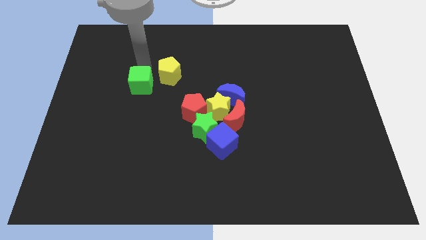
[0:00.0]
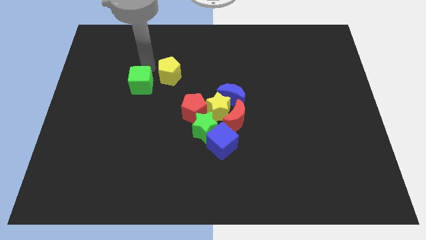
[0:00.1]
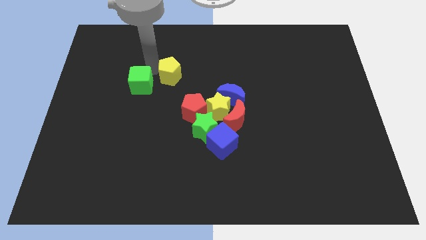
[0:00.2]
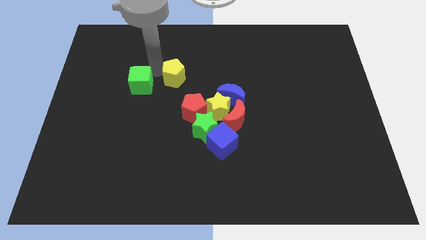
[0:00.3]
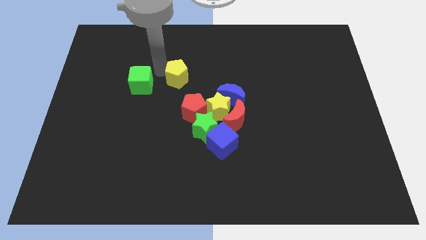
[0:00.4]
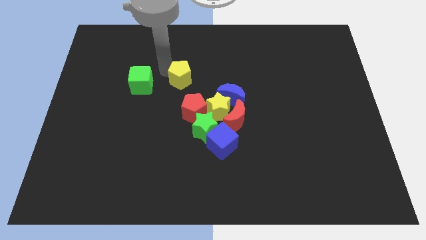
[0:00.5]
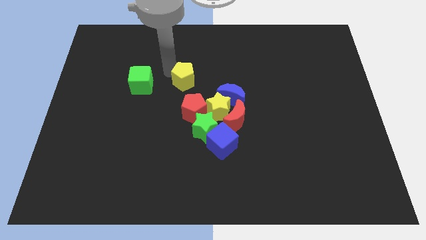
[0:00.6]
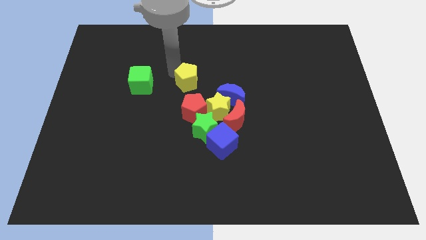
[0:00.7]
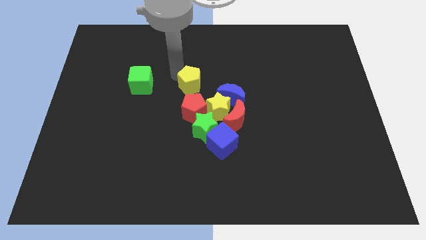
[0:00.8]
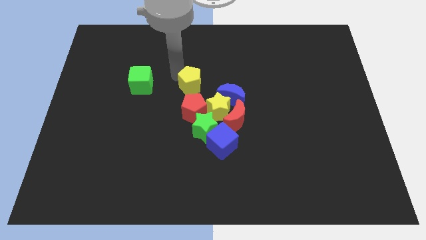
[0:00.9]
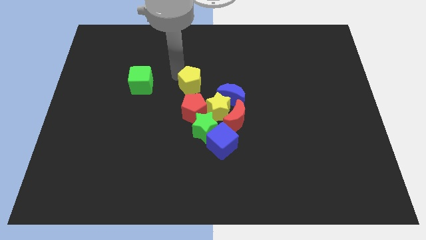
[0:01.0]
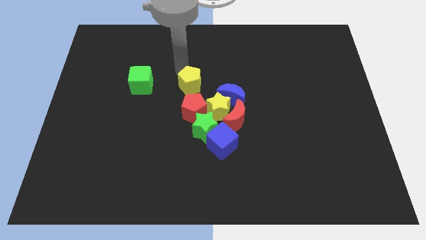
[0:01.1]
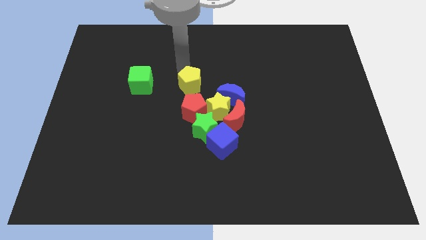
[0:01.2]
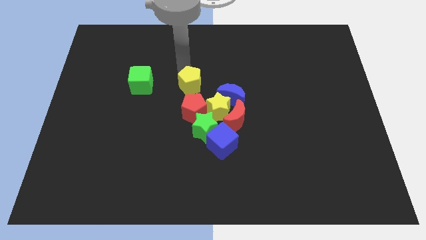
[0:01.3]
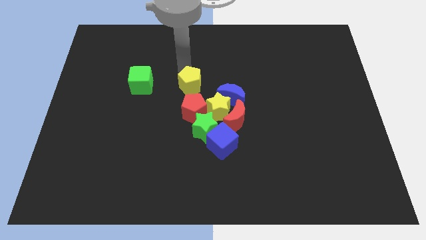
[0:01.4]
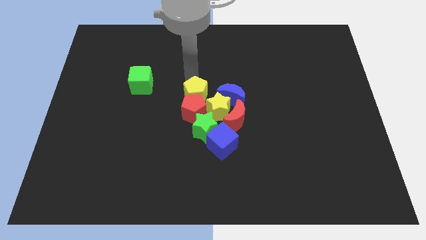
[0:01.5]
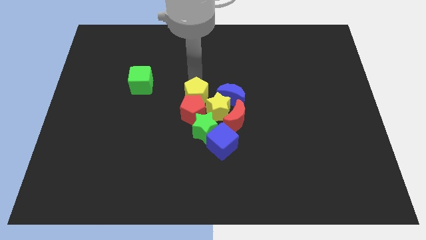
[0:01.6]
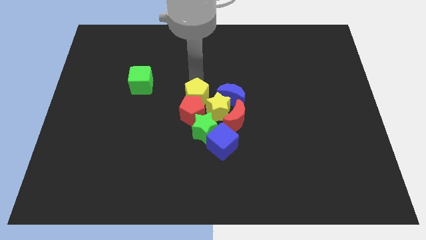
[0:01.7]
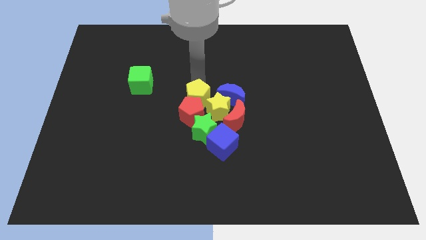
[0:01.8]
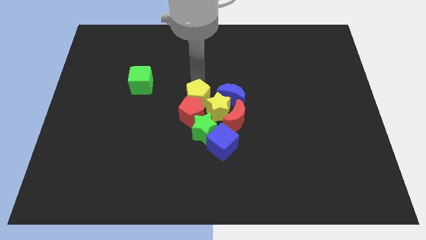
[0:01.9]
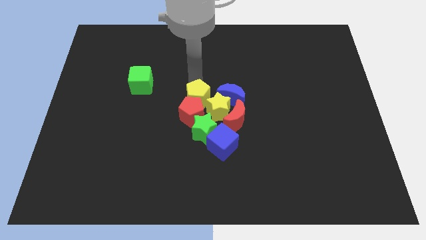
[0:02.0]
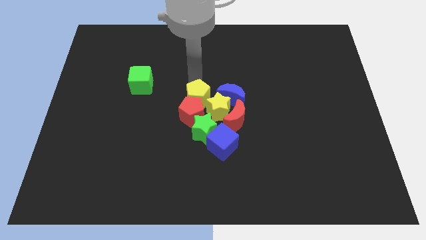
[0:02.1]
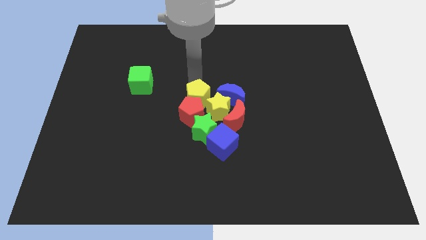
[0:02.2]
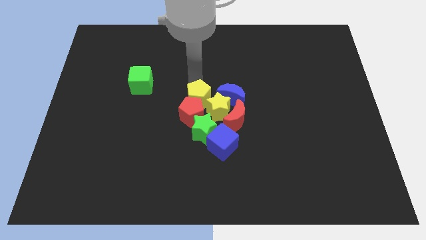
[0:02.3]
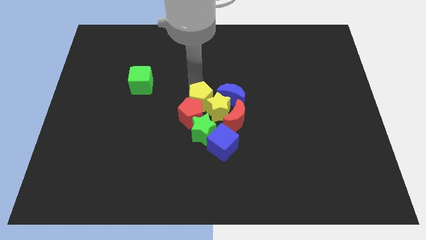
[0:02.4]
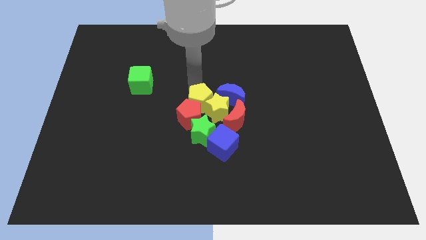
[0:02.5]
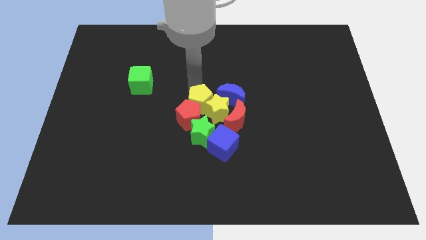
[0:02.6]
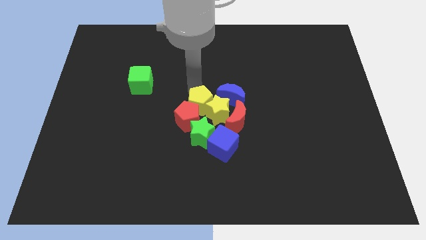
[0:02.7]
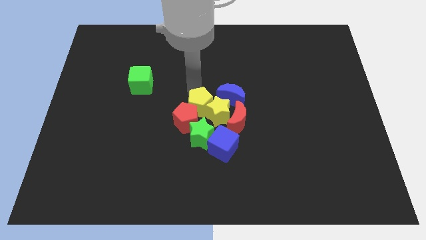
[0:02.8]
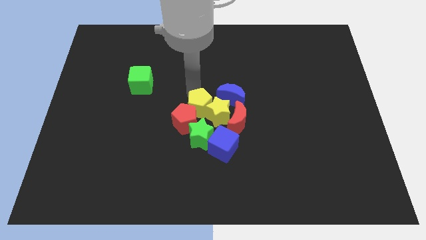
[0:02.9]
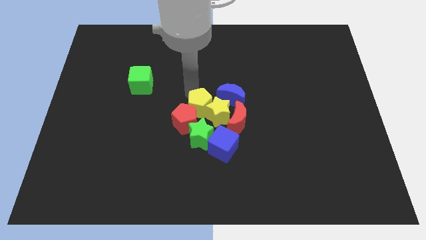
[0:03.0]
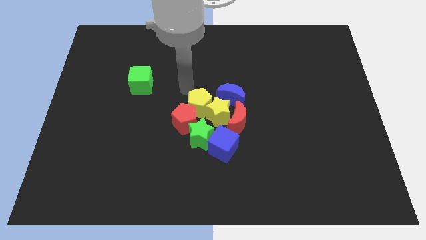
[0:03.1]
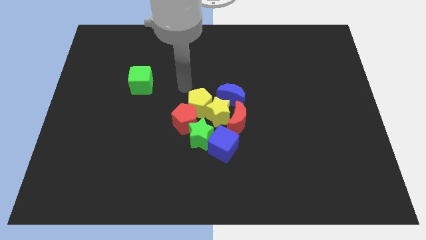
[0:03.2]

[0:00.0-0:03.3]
push the yellow pentagon into the group of blocks

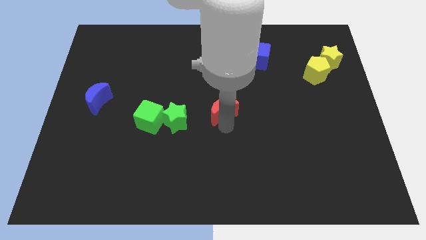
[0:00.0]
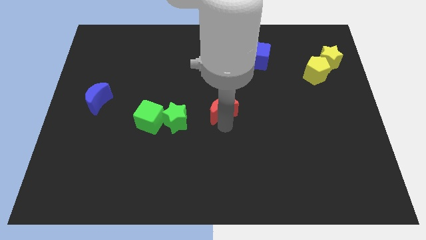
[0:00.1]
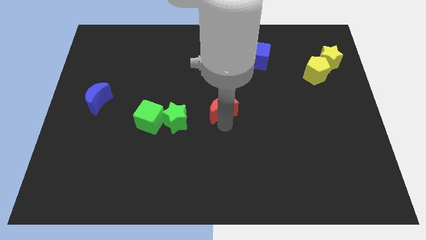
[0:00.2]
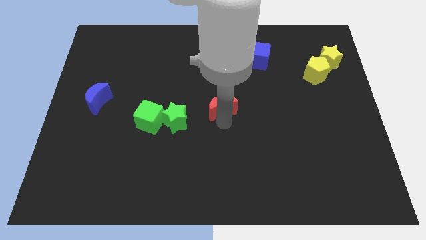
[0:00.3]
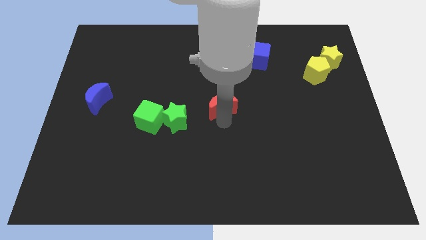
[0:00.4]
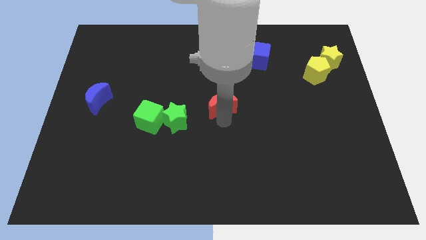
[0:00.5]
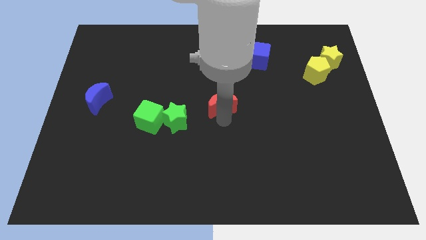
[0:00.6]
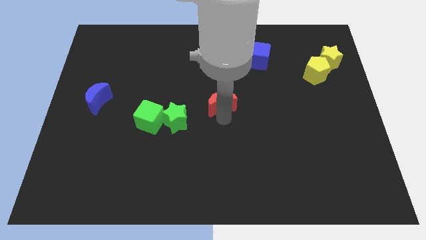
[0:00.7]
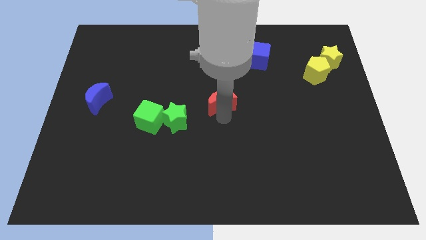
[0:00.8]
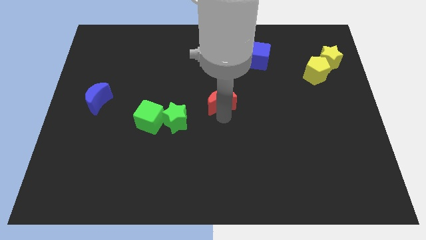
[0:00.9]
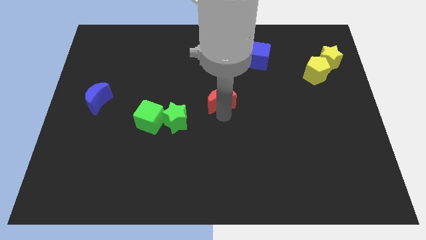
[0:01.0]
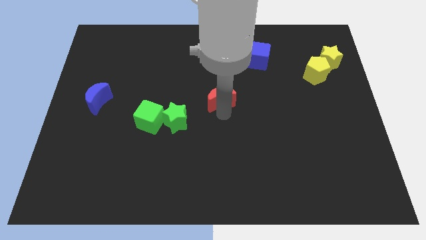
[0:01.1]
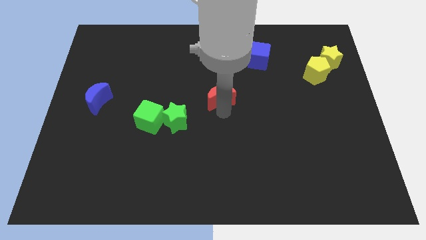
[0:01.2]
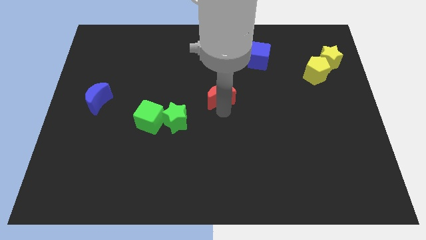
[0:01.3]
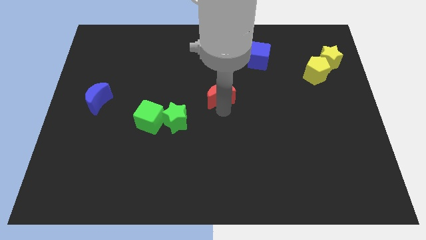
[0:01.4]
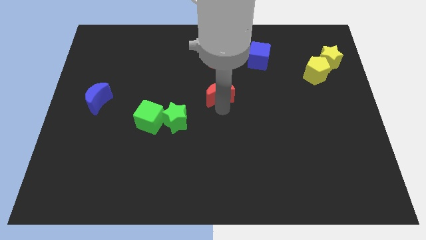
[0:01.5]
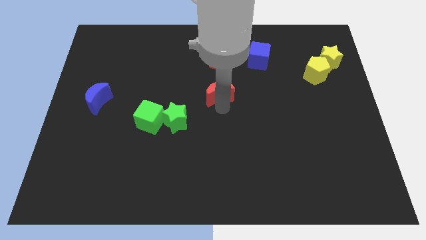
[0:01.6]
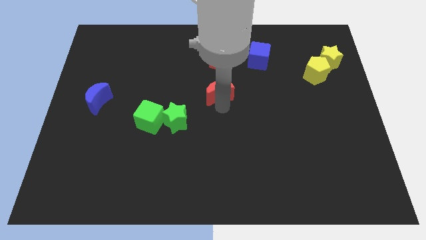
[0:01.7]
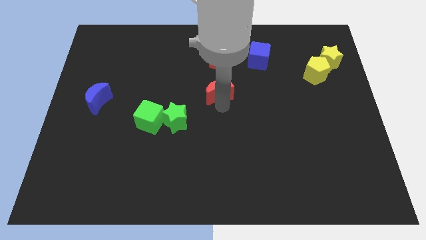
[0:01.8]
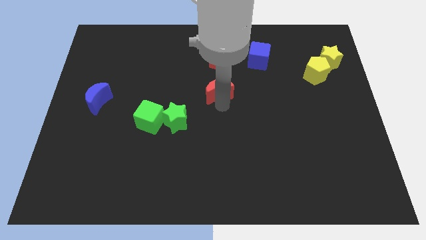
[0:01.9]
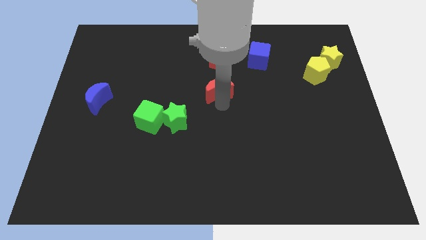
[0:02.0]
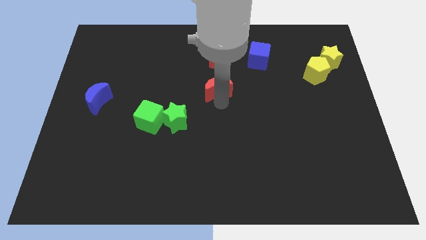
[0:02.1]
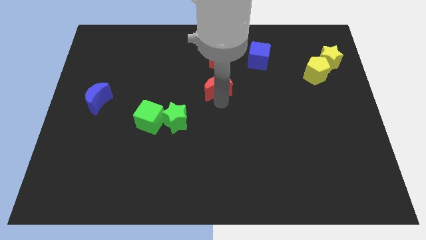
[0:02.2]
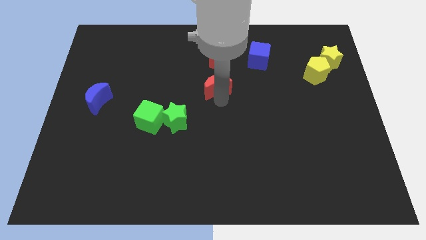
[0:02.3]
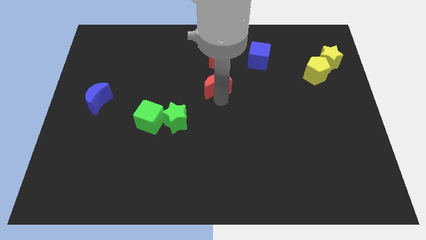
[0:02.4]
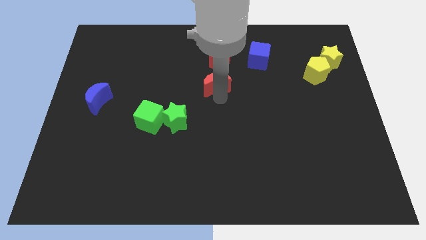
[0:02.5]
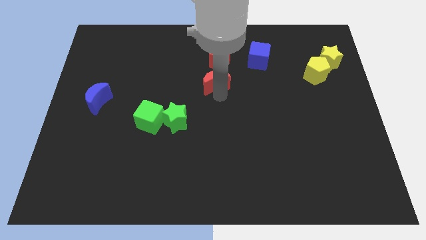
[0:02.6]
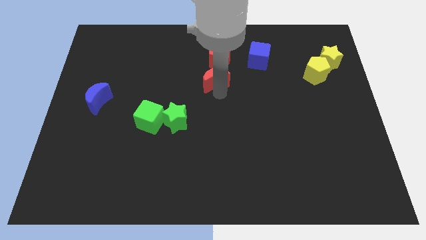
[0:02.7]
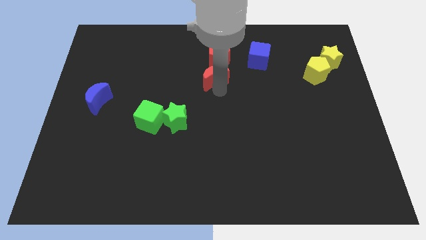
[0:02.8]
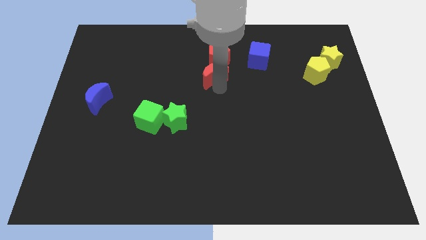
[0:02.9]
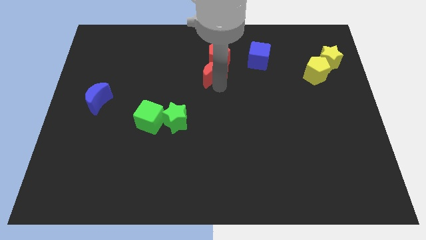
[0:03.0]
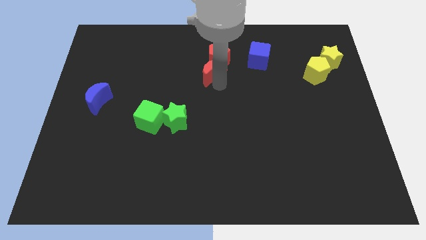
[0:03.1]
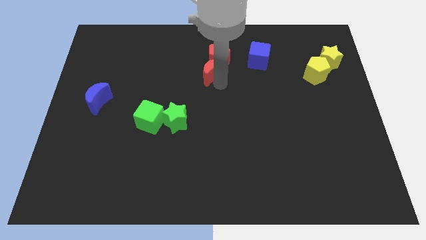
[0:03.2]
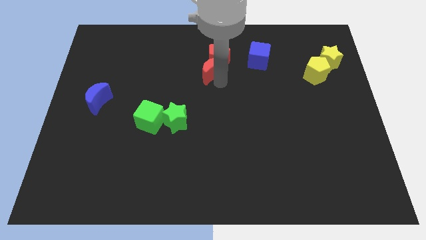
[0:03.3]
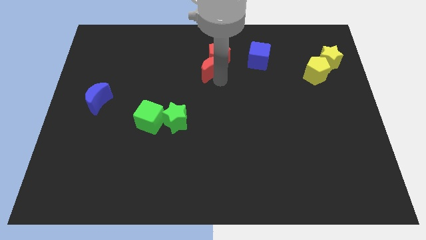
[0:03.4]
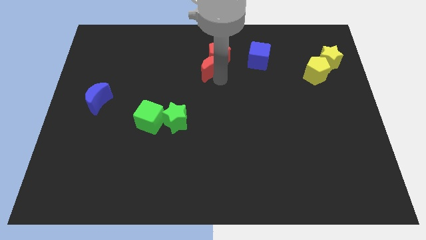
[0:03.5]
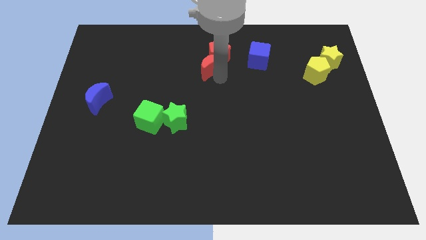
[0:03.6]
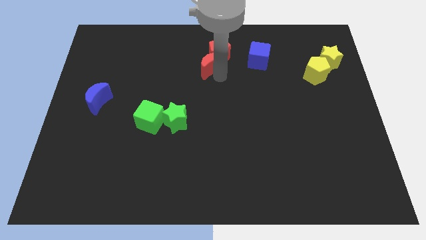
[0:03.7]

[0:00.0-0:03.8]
move the red crescent into the bottom of the red pentagon

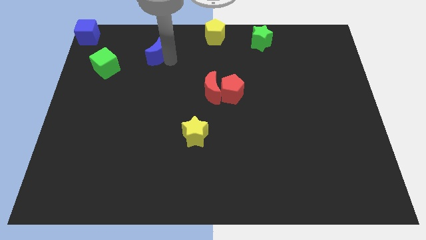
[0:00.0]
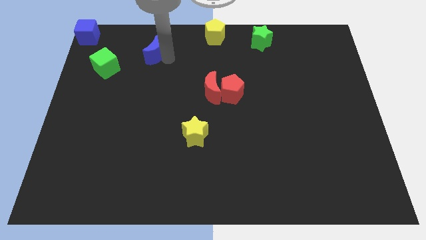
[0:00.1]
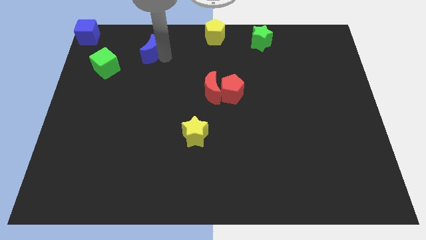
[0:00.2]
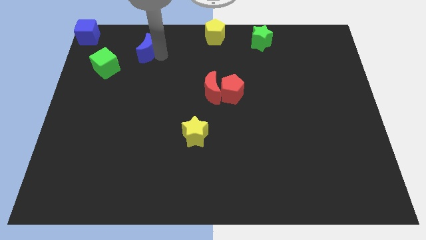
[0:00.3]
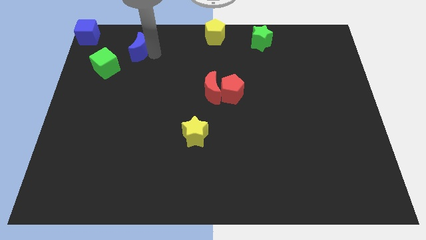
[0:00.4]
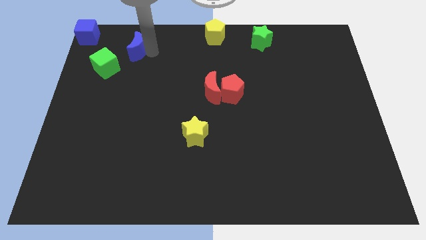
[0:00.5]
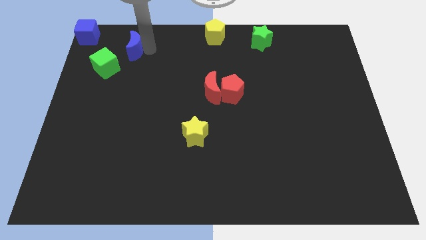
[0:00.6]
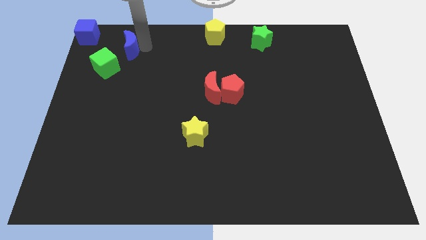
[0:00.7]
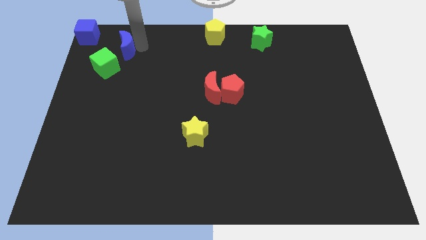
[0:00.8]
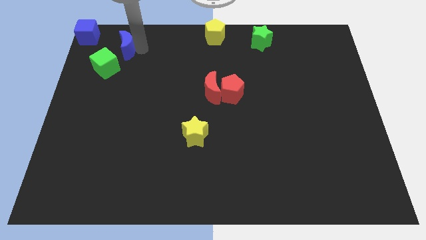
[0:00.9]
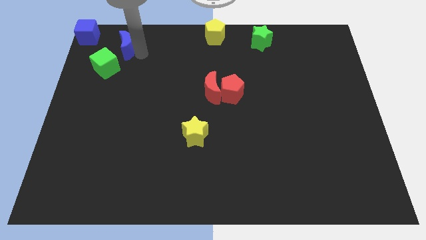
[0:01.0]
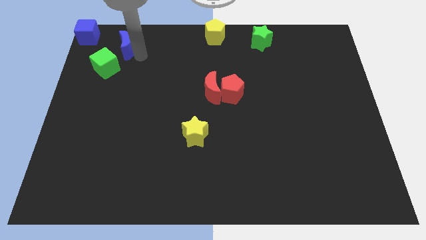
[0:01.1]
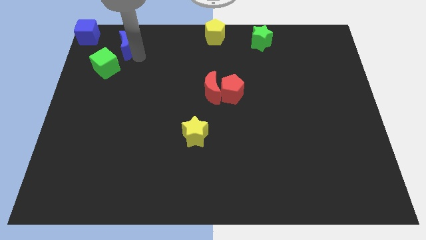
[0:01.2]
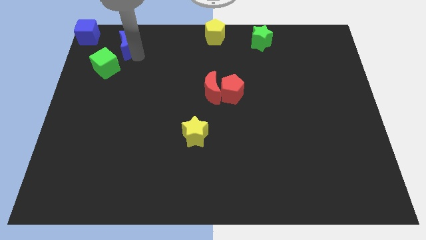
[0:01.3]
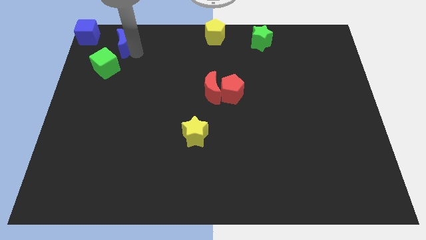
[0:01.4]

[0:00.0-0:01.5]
move the blue moon to the top of the green cube

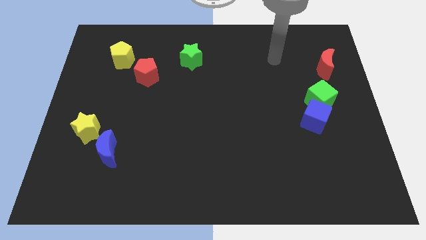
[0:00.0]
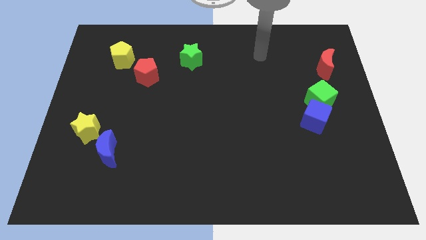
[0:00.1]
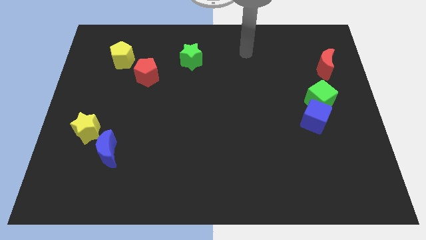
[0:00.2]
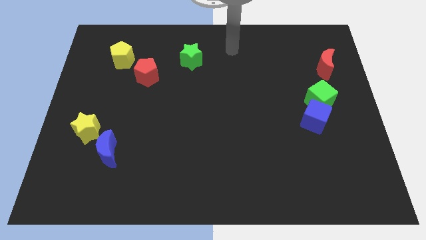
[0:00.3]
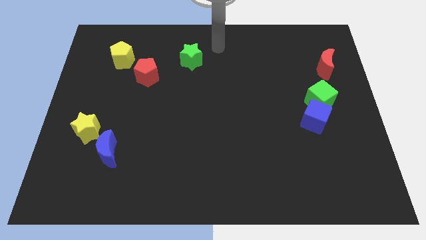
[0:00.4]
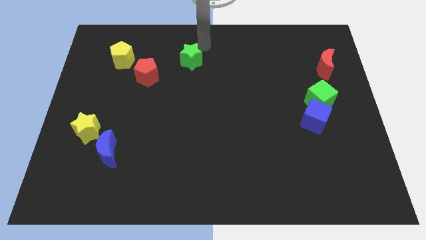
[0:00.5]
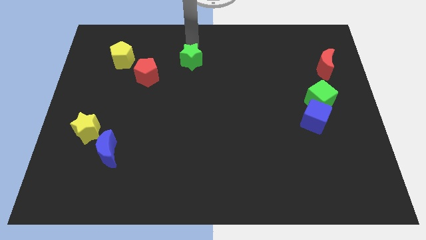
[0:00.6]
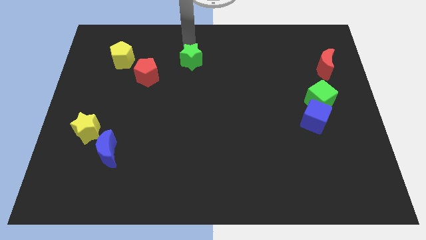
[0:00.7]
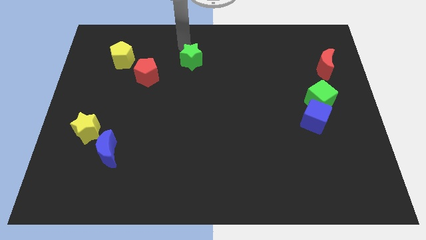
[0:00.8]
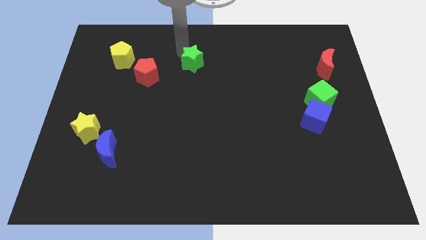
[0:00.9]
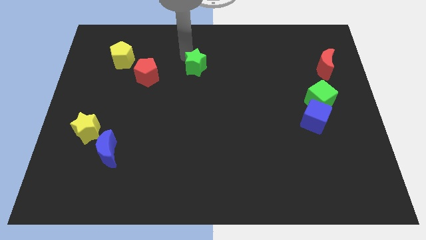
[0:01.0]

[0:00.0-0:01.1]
move the arm into the green star
